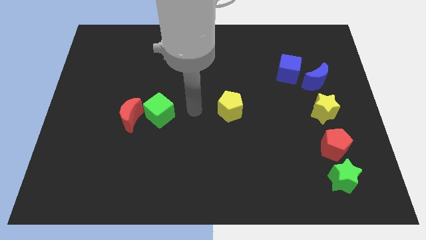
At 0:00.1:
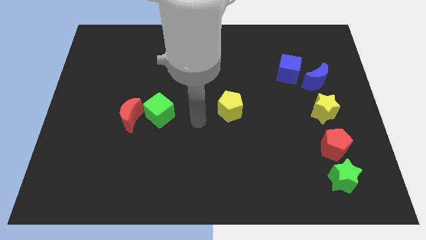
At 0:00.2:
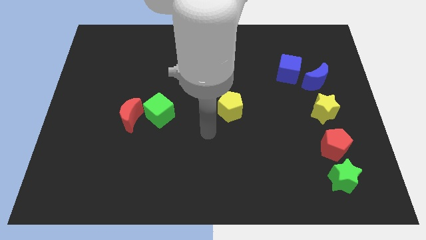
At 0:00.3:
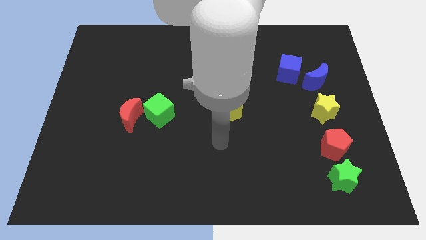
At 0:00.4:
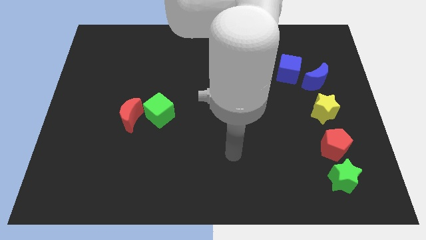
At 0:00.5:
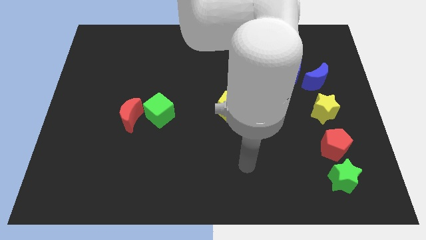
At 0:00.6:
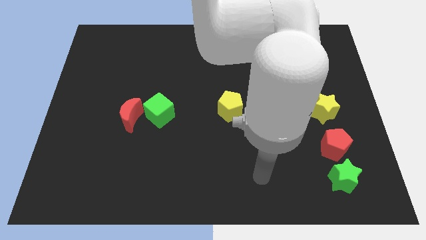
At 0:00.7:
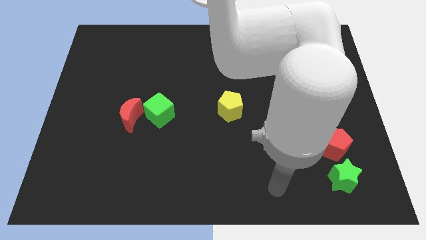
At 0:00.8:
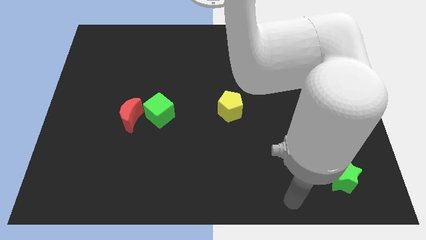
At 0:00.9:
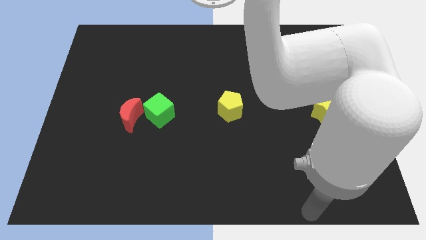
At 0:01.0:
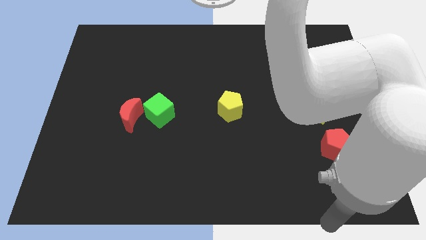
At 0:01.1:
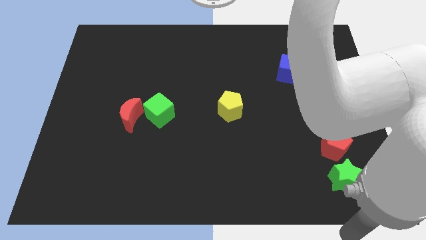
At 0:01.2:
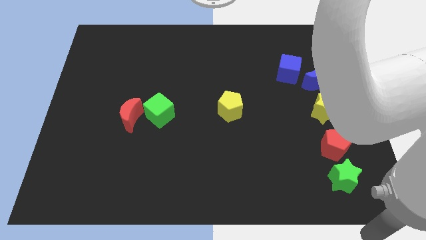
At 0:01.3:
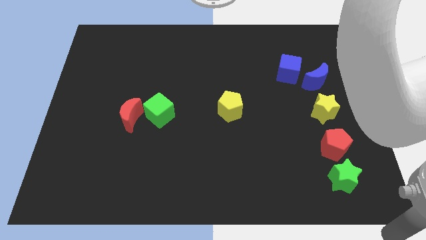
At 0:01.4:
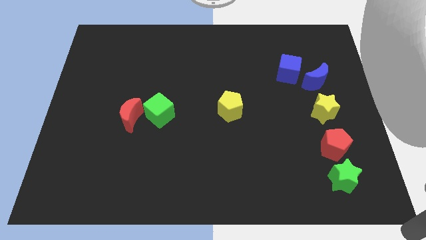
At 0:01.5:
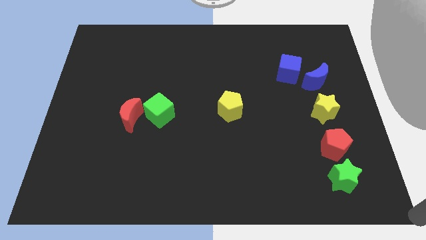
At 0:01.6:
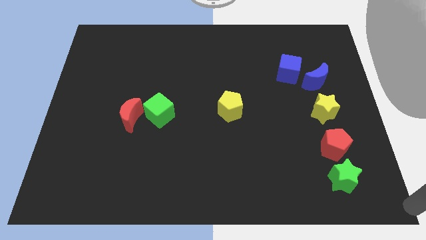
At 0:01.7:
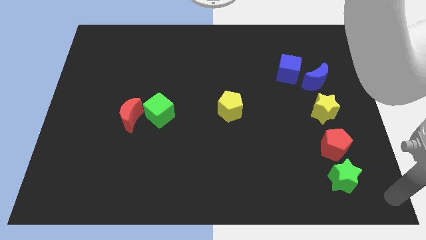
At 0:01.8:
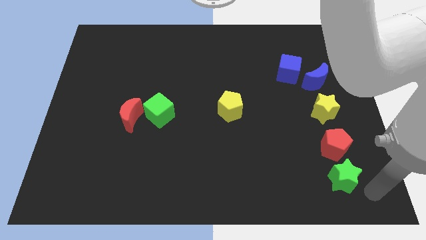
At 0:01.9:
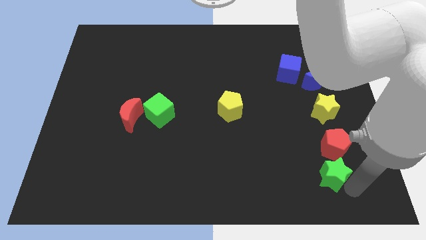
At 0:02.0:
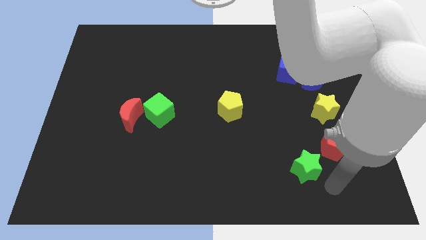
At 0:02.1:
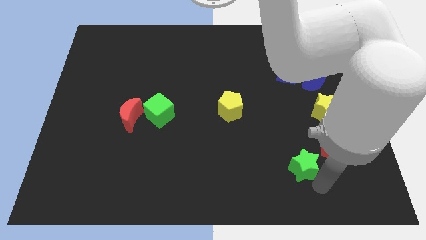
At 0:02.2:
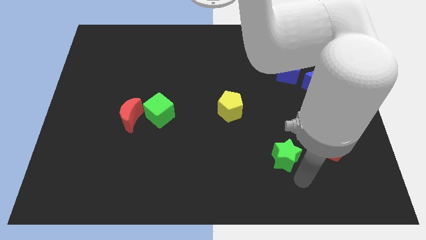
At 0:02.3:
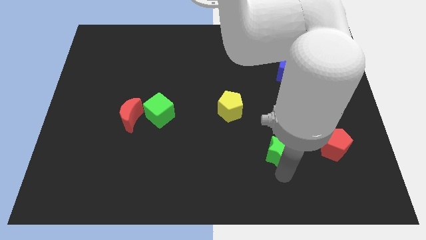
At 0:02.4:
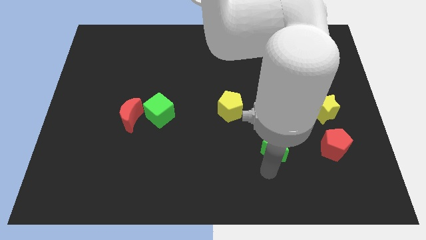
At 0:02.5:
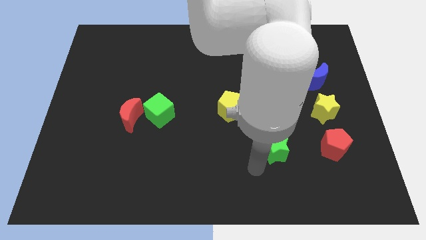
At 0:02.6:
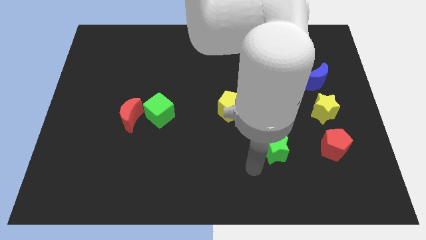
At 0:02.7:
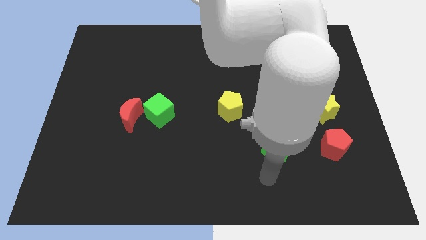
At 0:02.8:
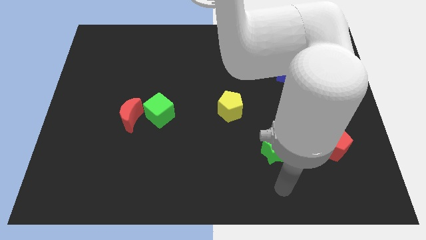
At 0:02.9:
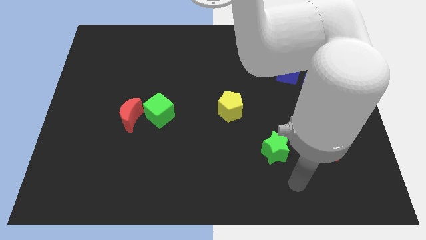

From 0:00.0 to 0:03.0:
push the green star to the left of the red pentagon

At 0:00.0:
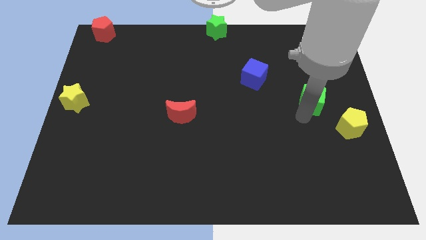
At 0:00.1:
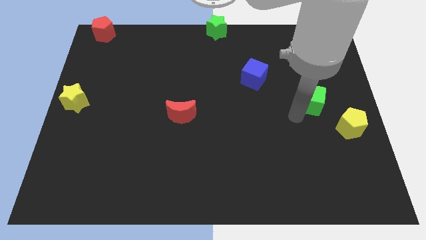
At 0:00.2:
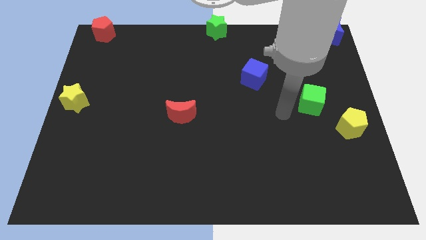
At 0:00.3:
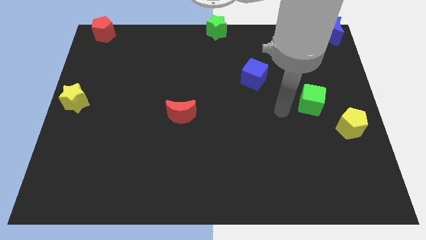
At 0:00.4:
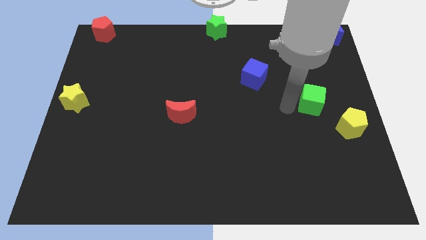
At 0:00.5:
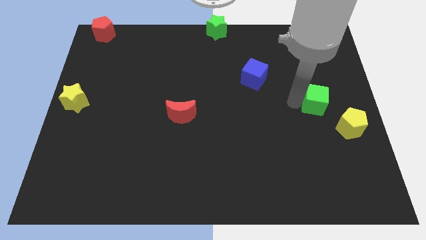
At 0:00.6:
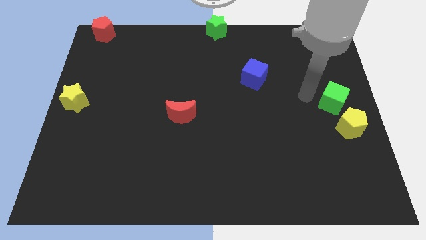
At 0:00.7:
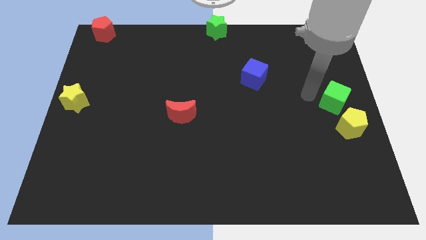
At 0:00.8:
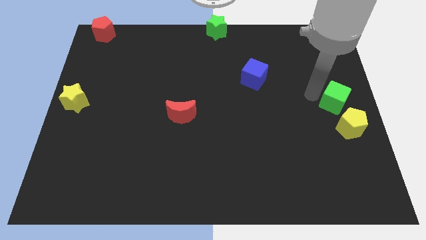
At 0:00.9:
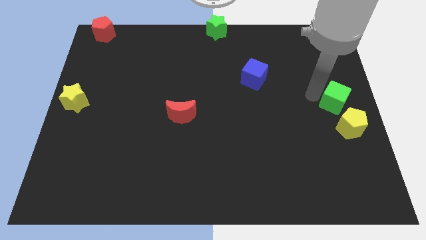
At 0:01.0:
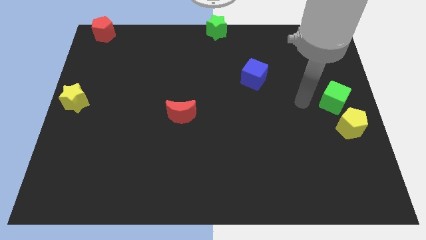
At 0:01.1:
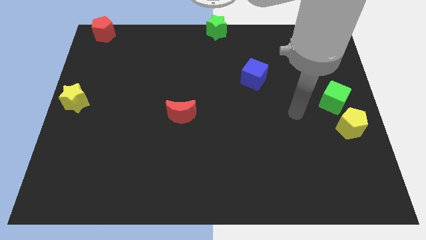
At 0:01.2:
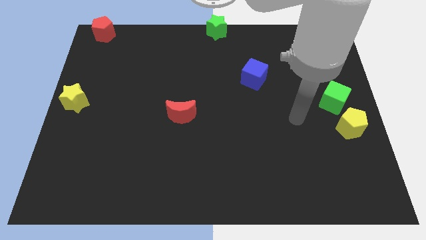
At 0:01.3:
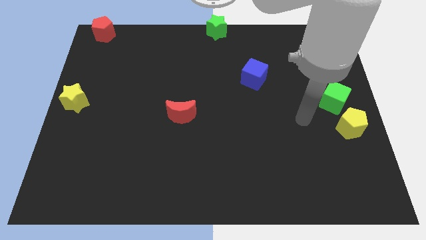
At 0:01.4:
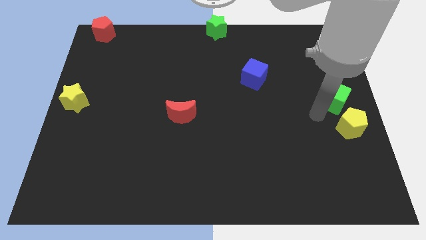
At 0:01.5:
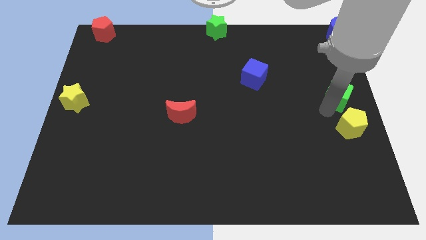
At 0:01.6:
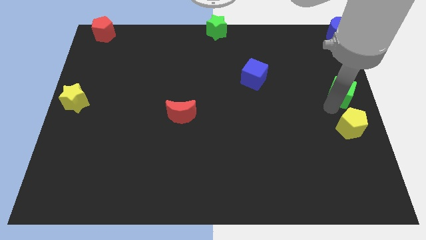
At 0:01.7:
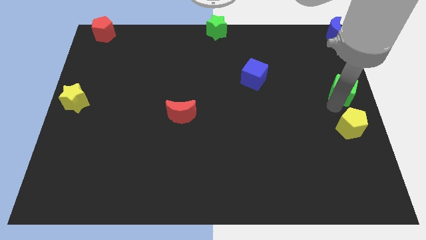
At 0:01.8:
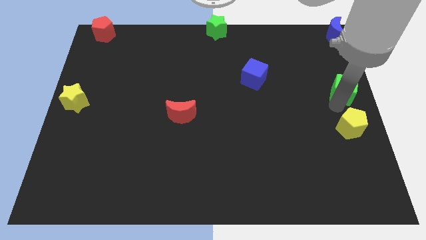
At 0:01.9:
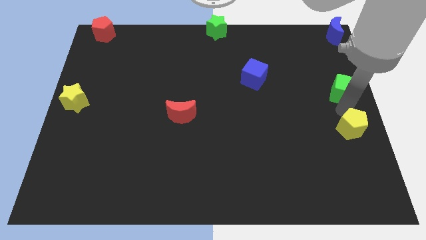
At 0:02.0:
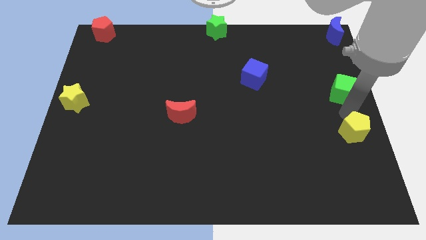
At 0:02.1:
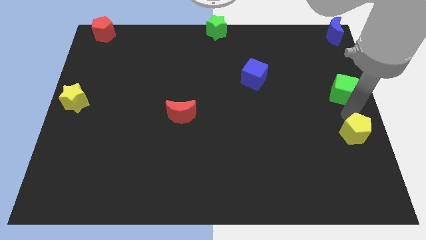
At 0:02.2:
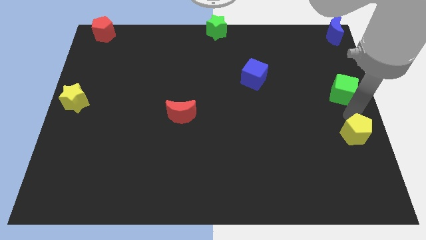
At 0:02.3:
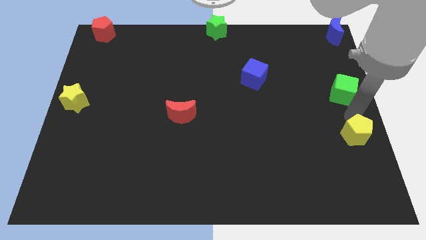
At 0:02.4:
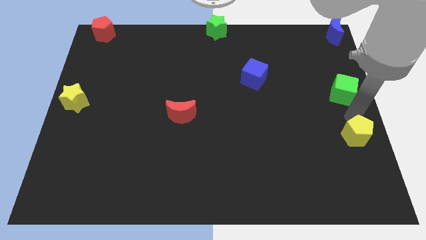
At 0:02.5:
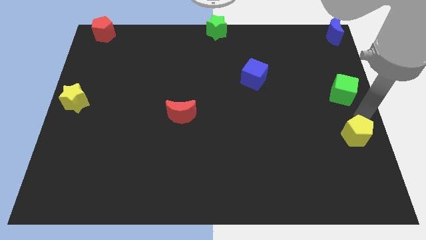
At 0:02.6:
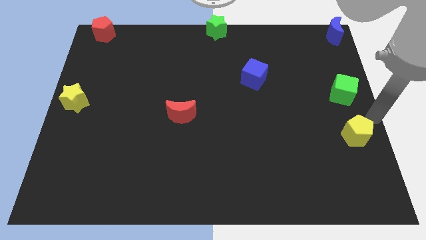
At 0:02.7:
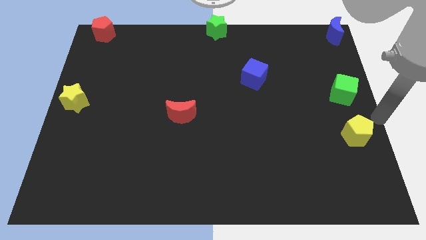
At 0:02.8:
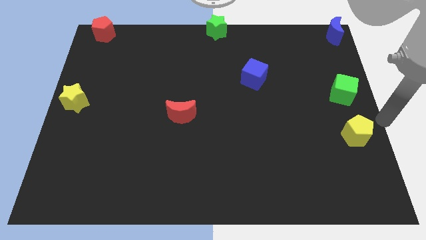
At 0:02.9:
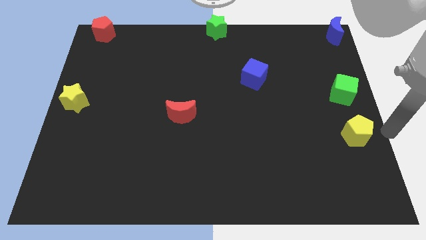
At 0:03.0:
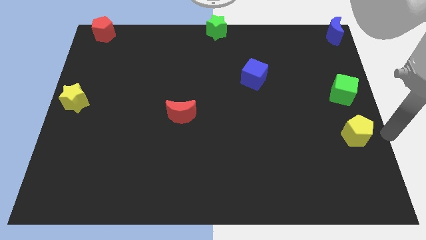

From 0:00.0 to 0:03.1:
move the green cube to the top side of the yellow pentagon

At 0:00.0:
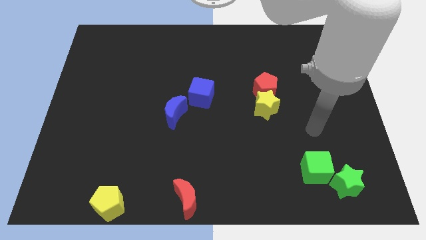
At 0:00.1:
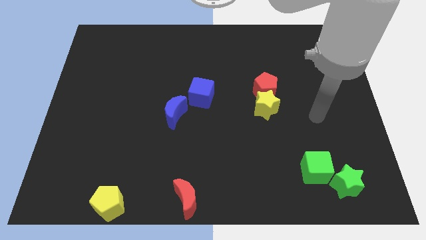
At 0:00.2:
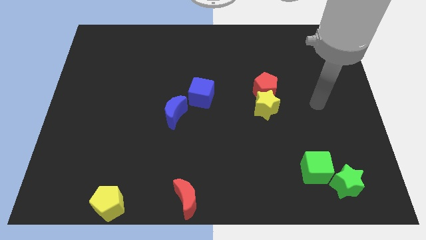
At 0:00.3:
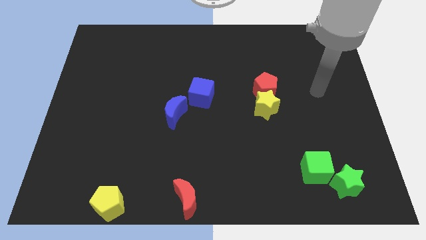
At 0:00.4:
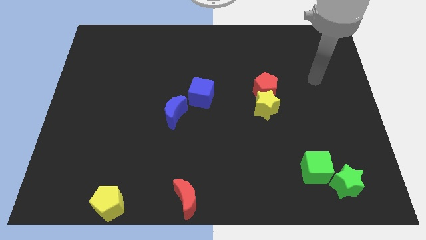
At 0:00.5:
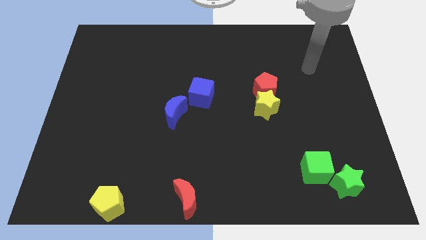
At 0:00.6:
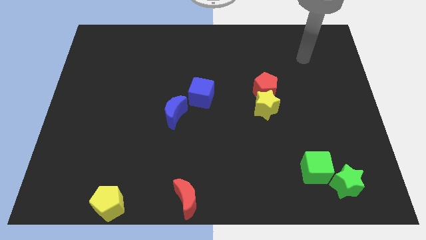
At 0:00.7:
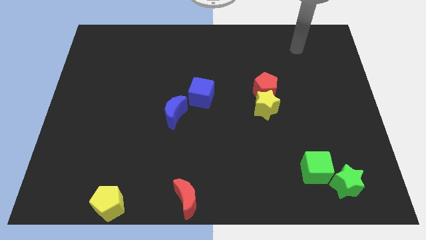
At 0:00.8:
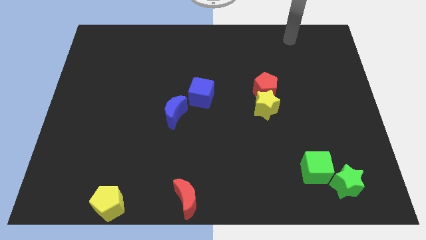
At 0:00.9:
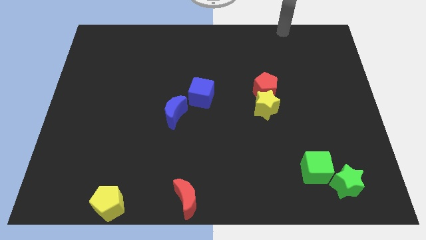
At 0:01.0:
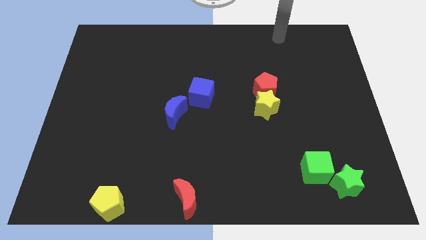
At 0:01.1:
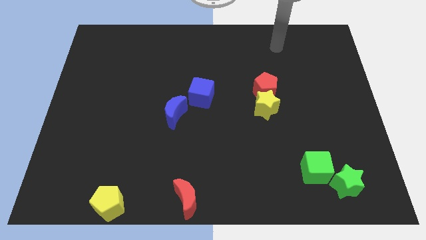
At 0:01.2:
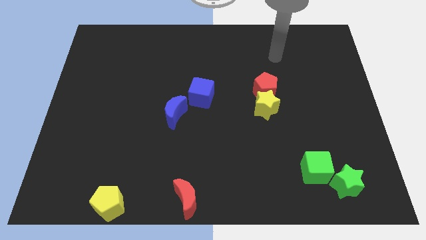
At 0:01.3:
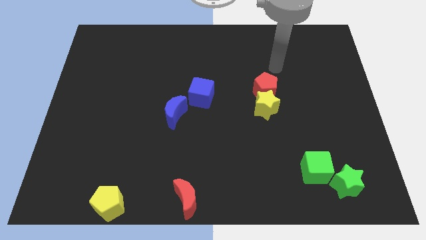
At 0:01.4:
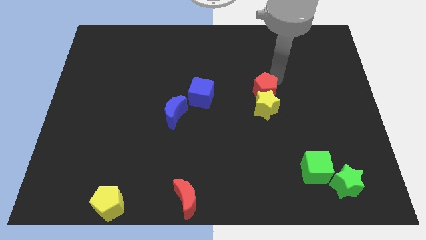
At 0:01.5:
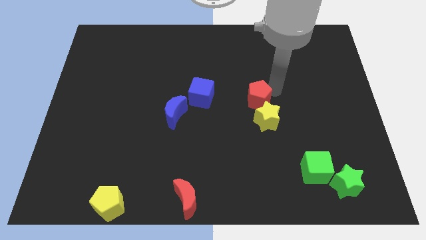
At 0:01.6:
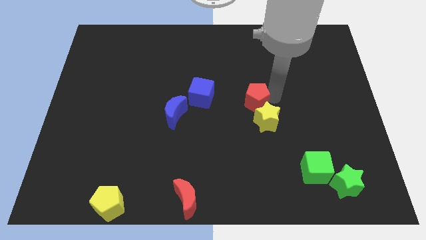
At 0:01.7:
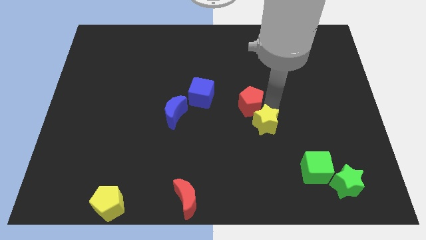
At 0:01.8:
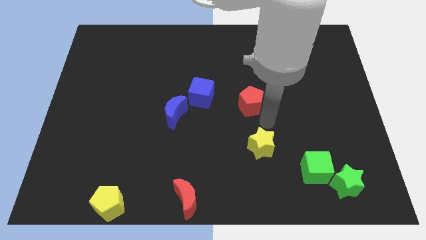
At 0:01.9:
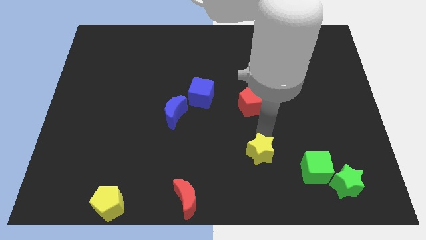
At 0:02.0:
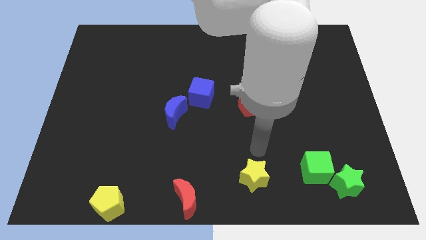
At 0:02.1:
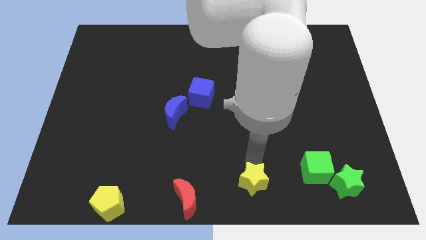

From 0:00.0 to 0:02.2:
move the yellow star towards the bottom side

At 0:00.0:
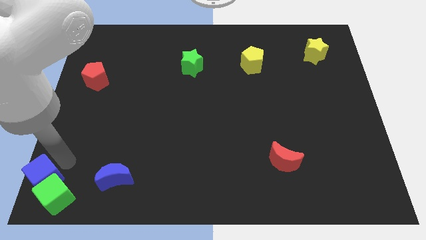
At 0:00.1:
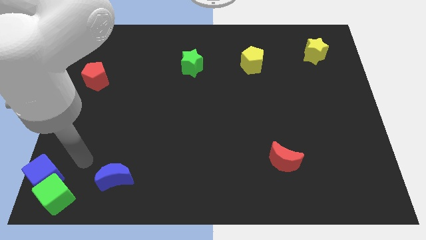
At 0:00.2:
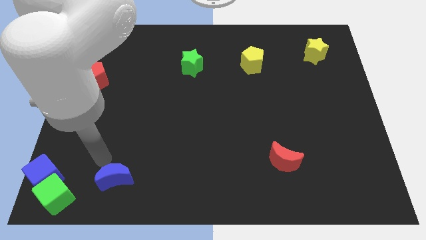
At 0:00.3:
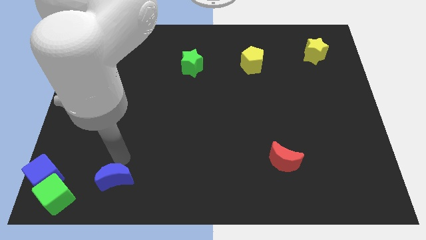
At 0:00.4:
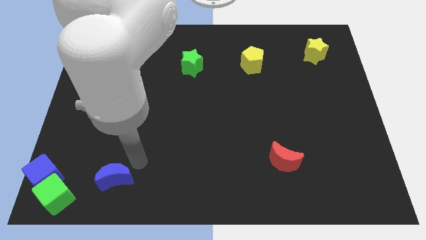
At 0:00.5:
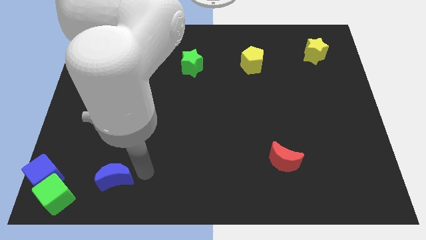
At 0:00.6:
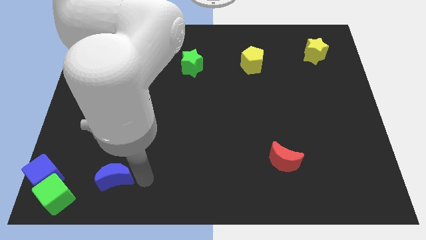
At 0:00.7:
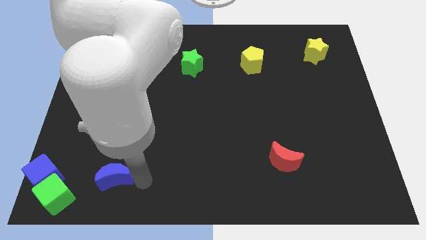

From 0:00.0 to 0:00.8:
point your arm at the right of the blue crescent
